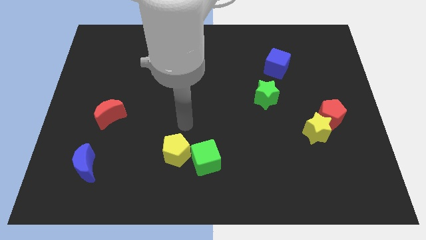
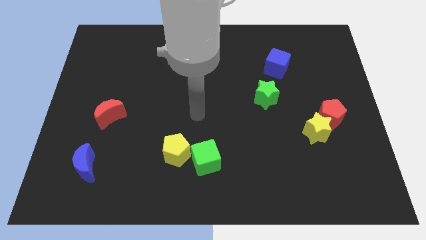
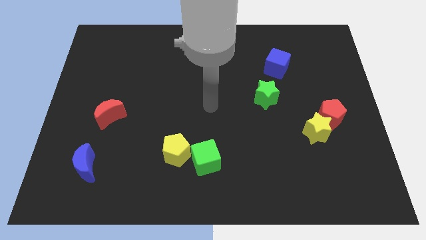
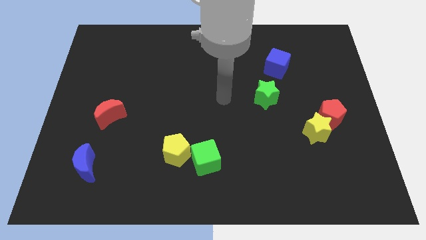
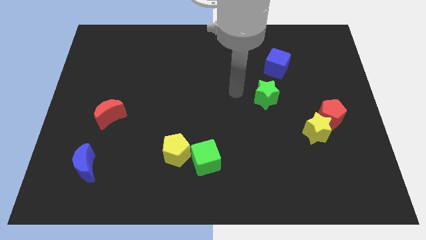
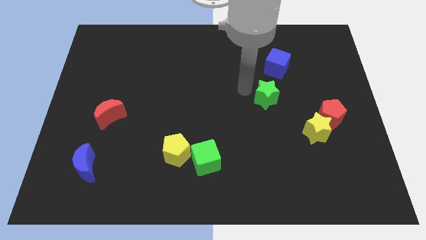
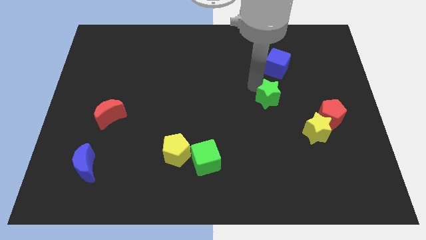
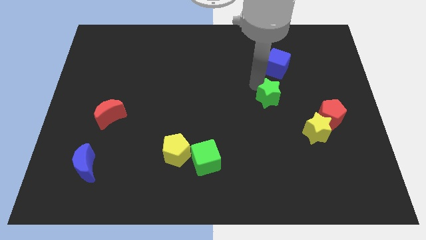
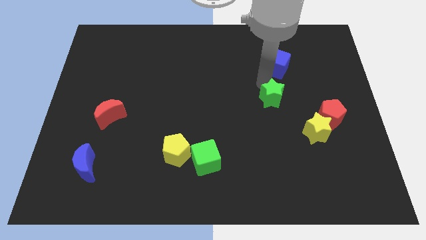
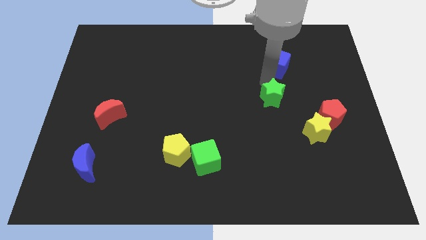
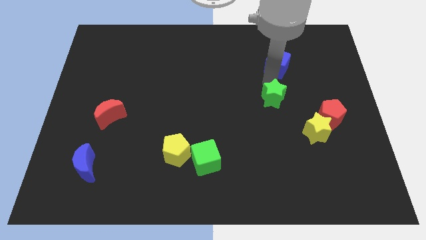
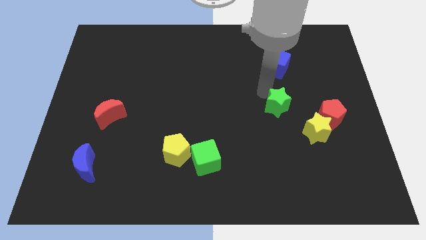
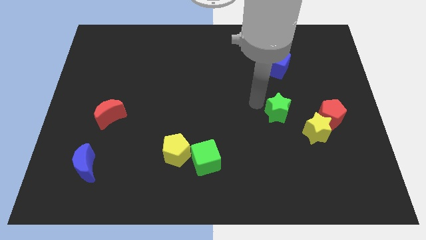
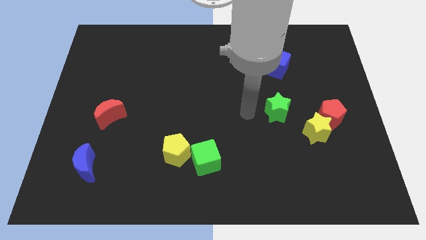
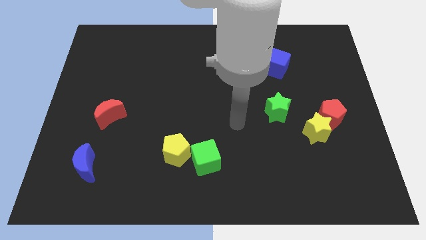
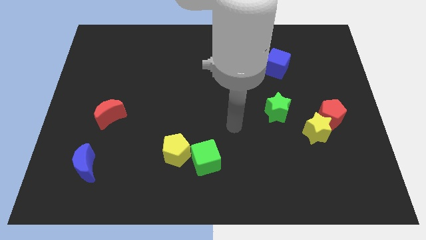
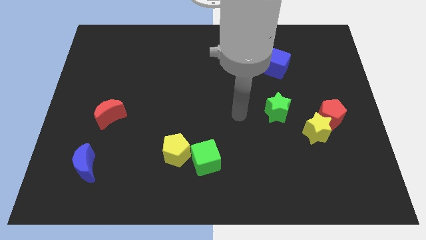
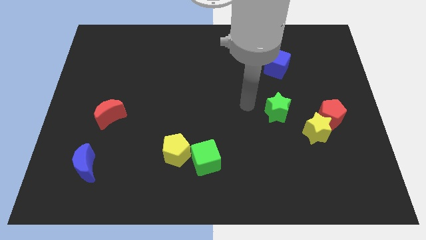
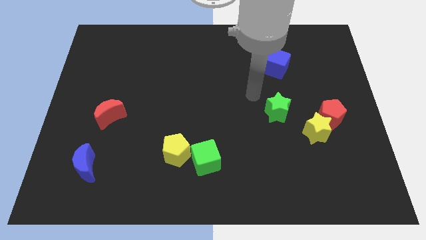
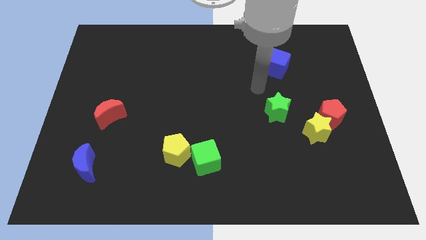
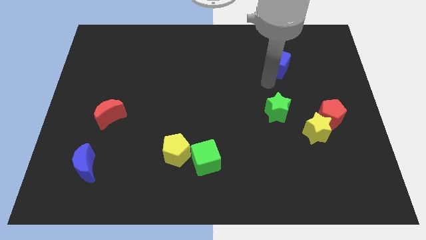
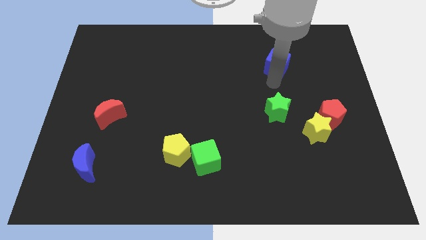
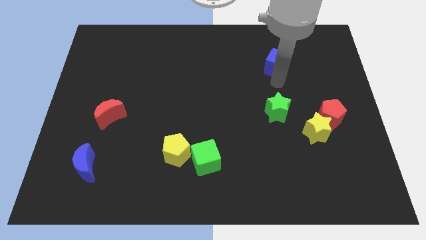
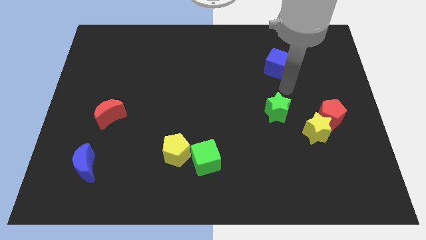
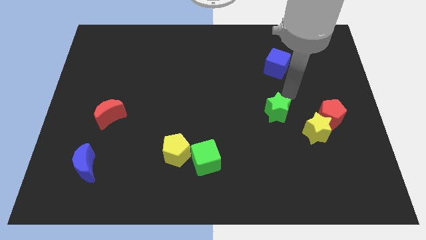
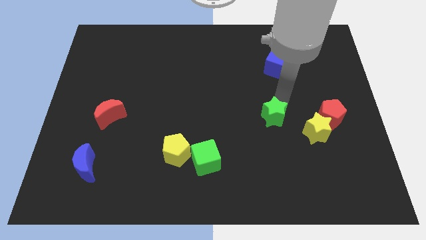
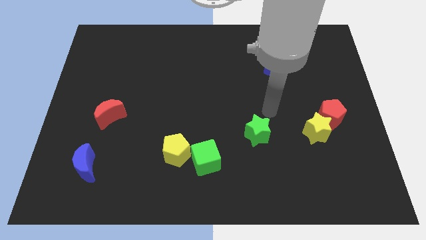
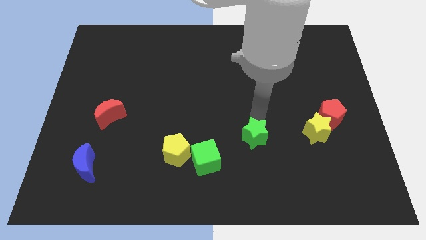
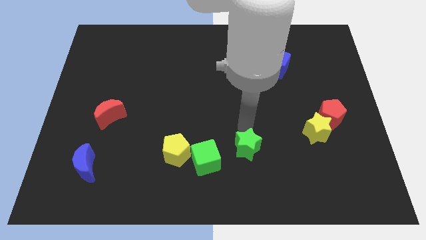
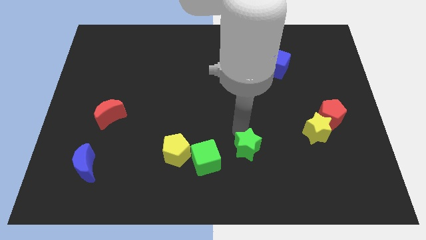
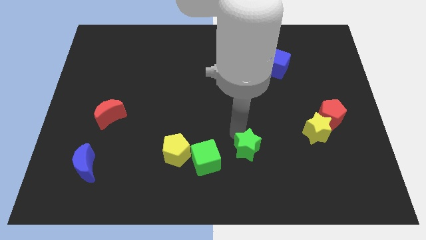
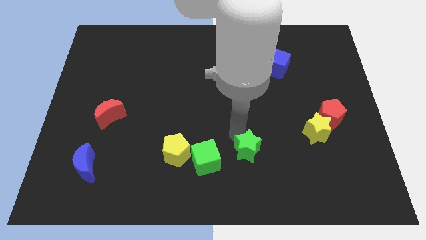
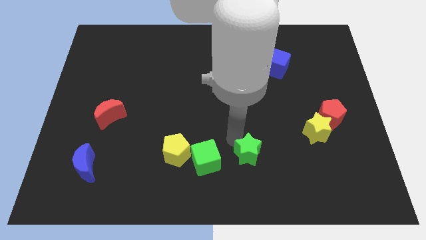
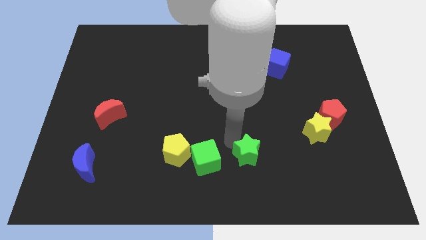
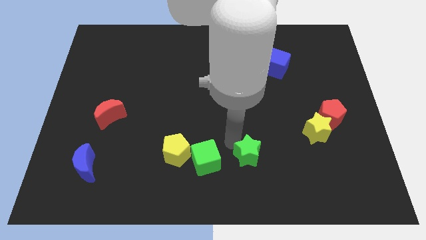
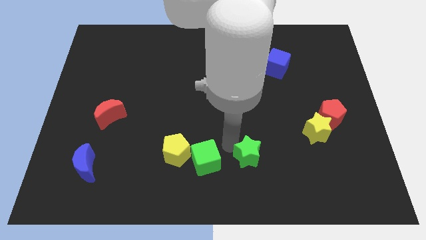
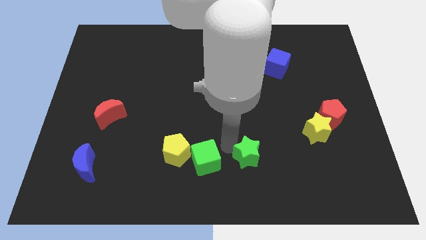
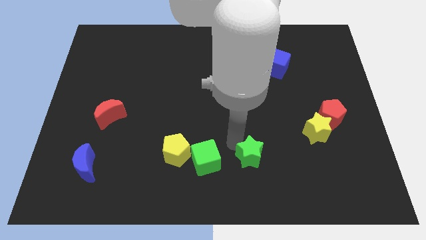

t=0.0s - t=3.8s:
push the green star to the right of the green cube

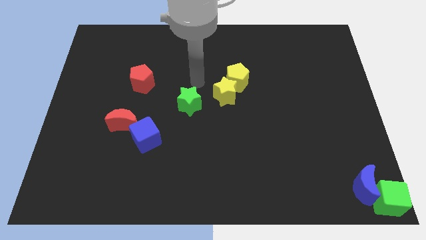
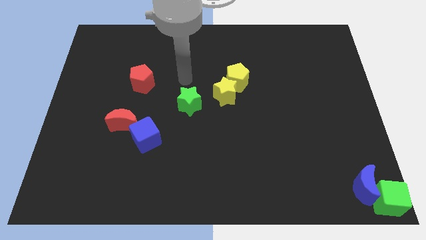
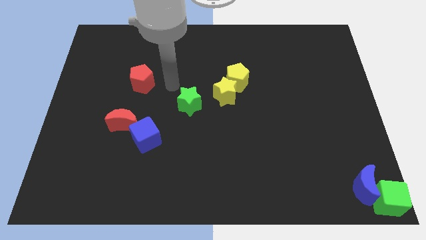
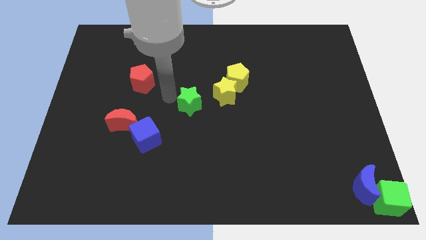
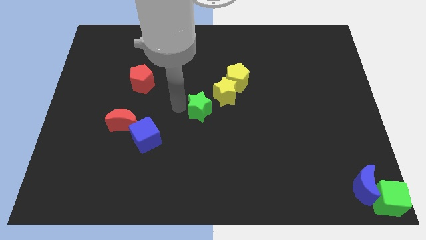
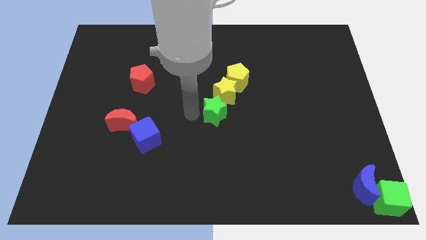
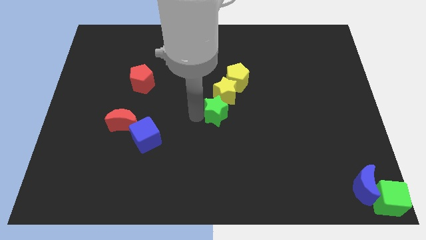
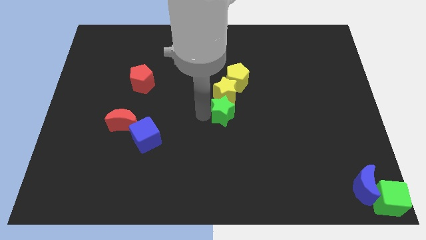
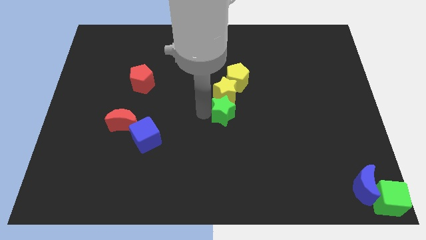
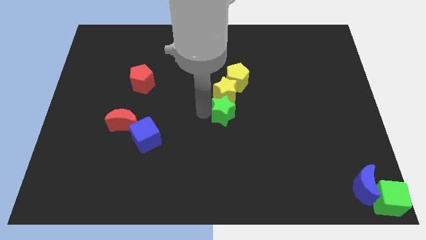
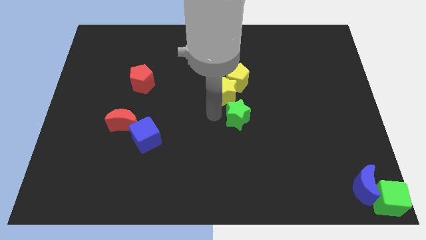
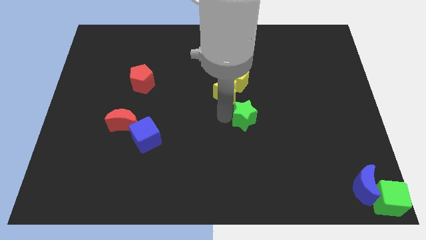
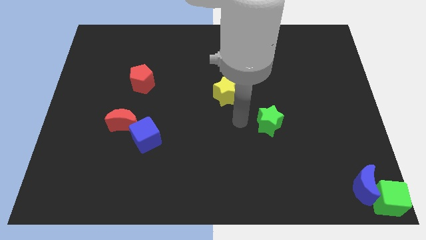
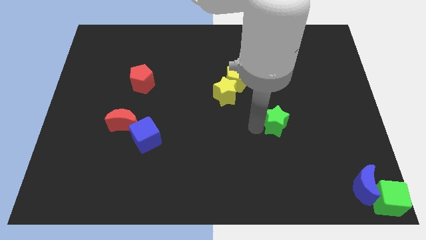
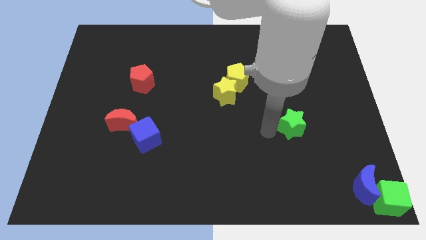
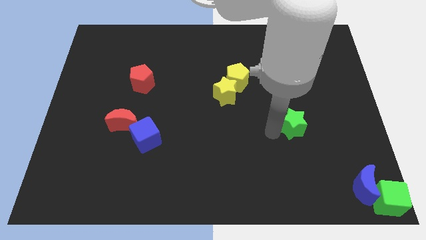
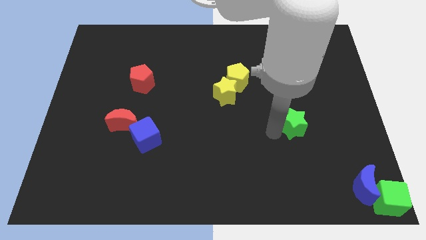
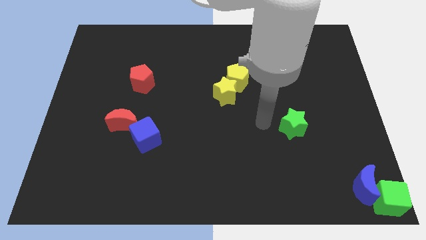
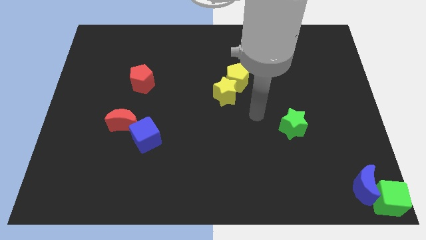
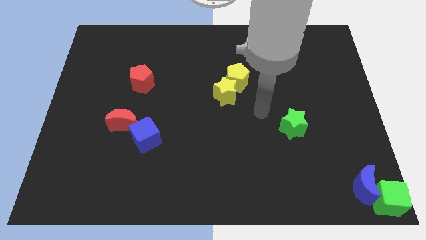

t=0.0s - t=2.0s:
push the green star towards the half blue moon

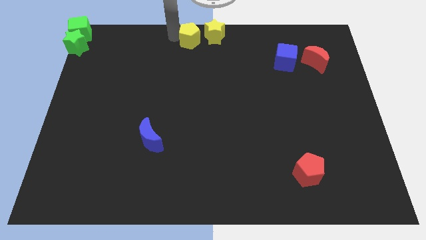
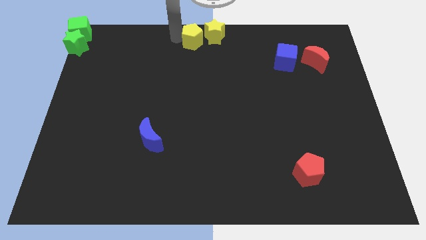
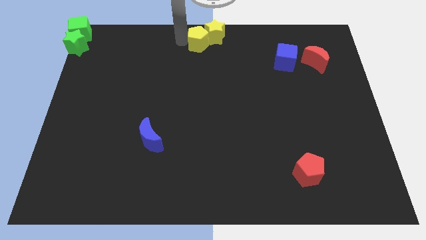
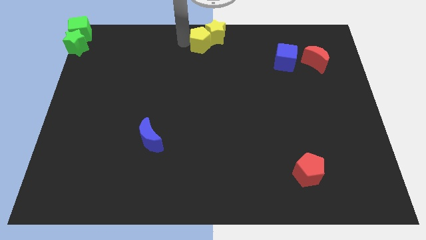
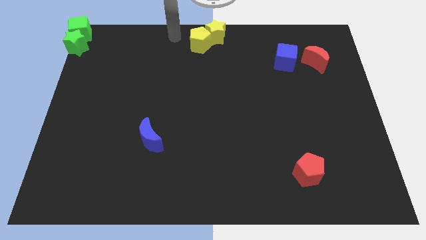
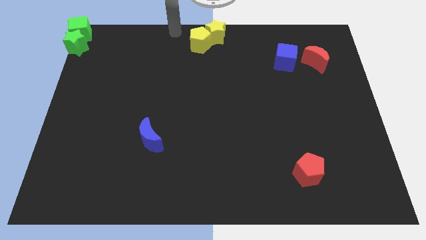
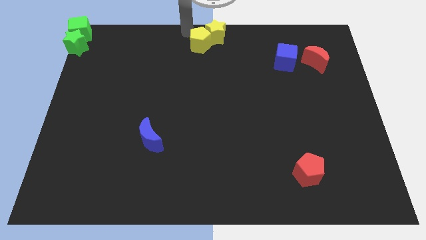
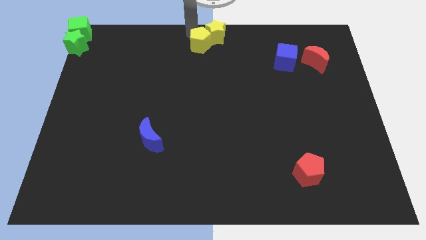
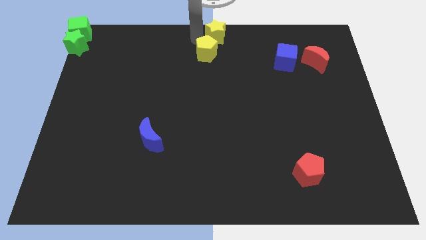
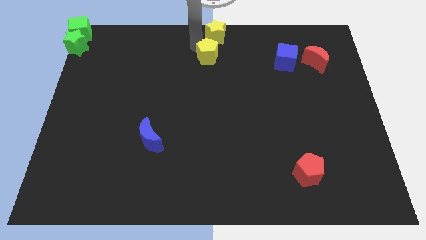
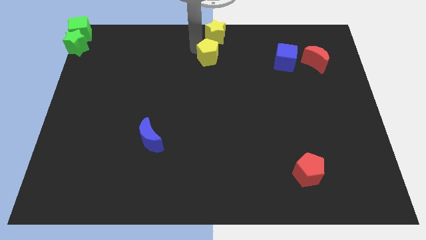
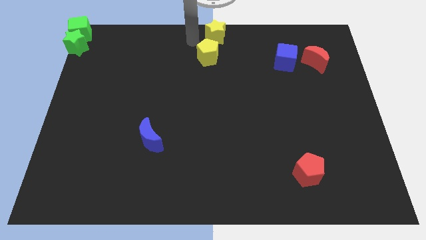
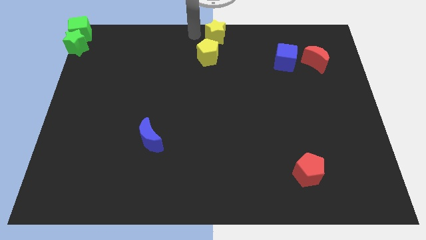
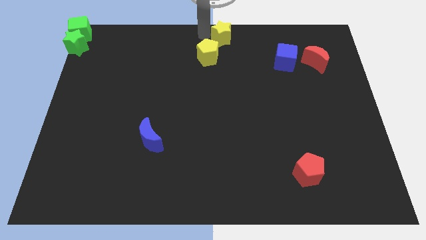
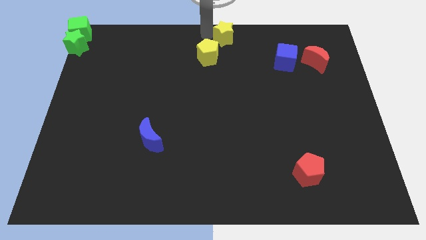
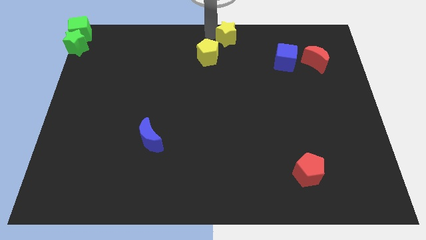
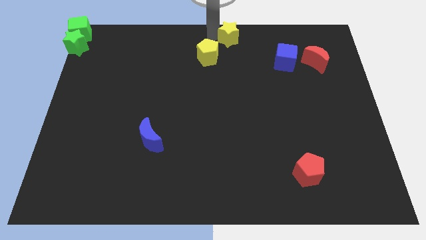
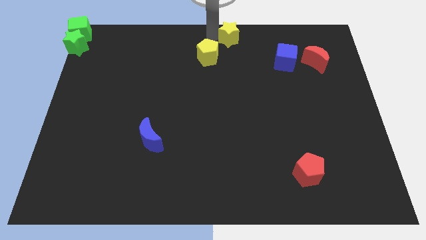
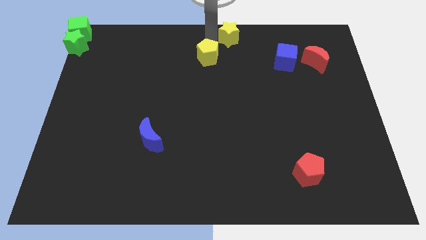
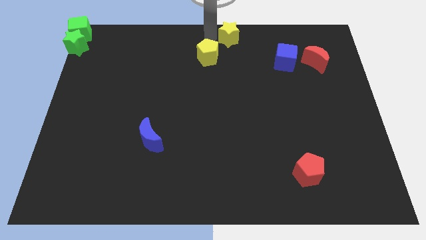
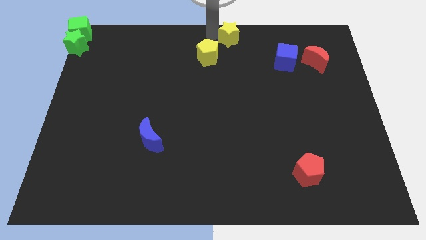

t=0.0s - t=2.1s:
put the green star diagonally top right to the yellow pentagon

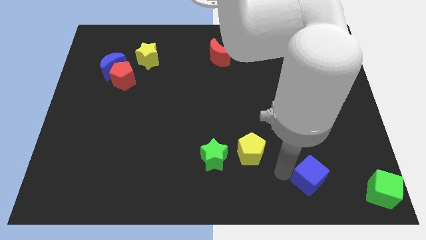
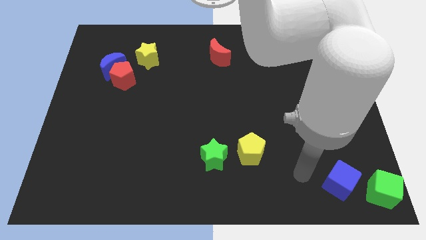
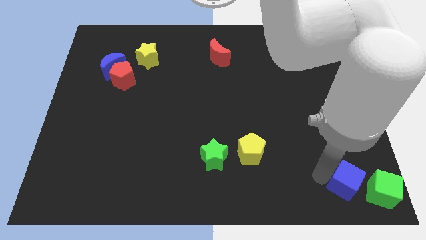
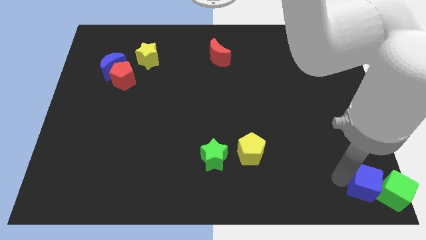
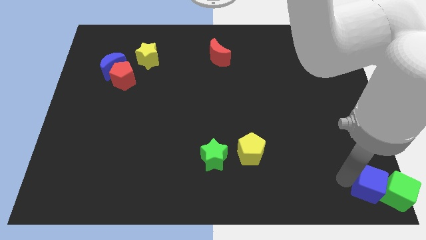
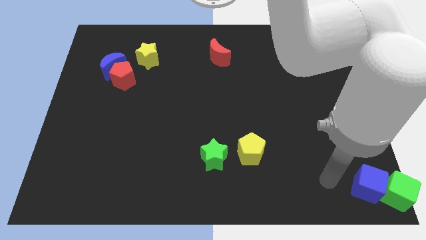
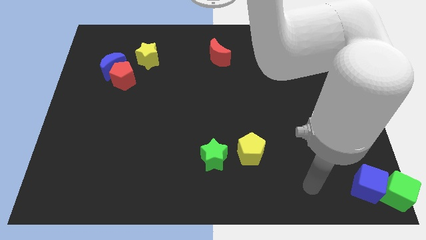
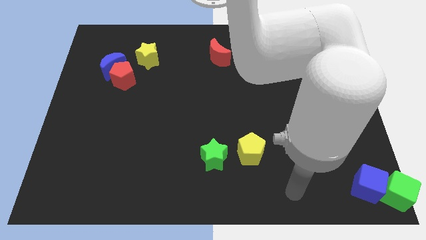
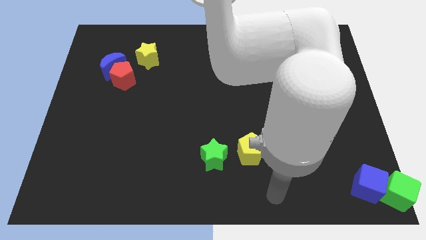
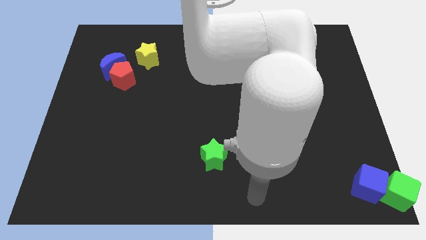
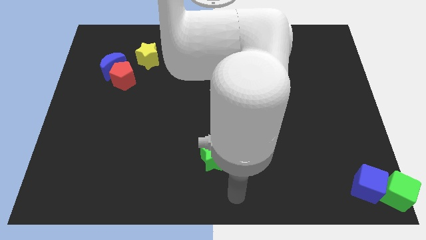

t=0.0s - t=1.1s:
push the blue cube into the green cube
